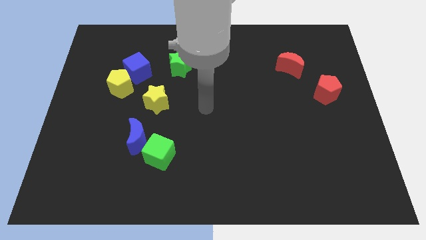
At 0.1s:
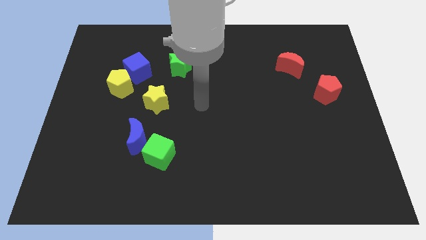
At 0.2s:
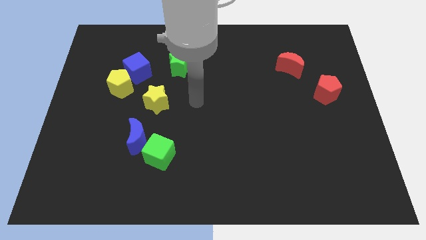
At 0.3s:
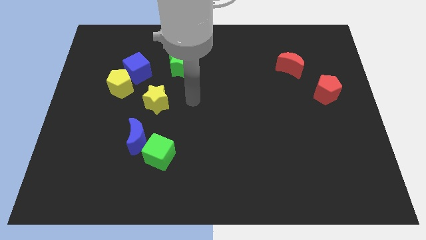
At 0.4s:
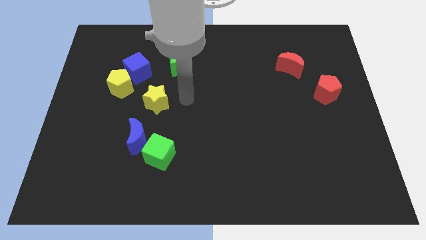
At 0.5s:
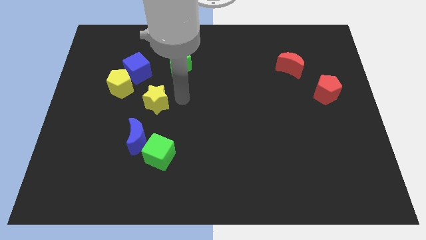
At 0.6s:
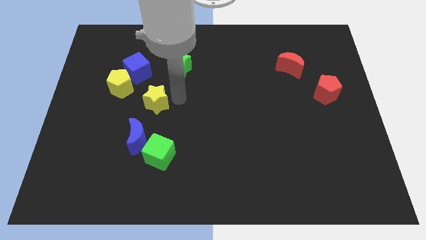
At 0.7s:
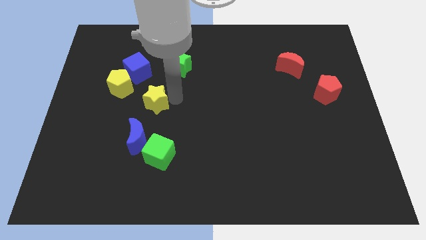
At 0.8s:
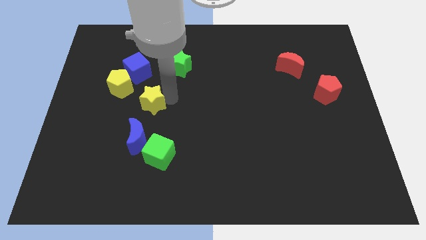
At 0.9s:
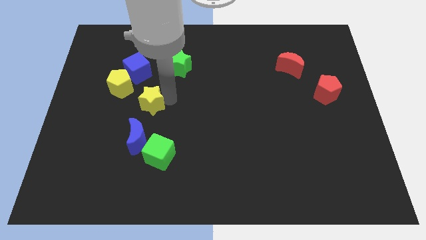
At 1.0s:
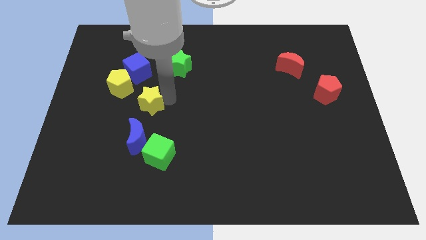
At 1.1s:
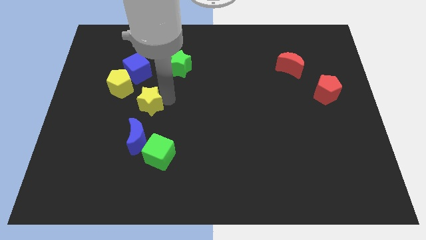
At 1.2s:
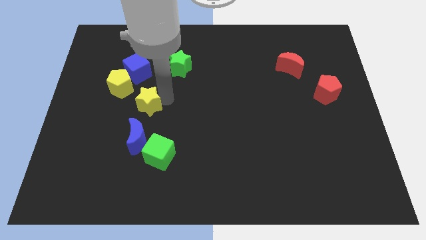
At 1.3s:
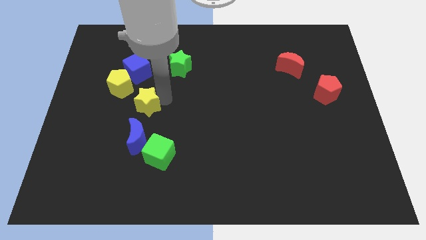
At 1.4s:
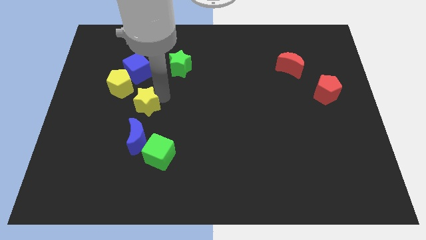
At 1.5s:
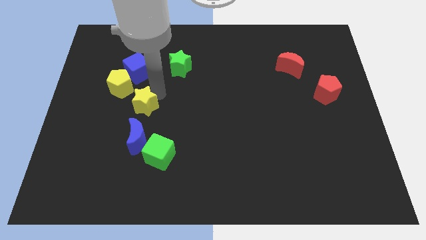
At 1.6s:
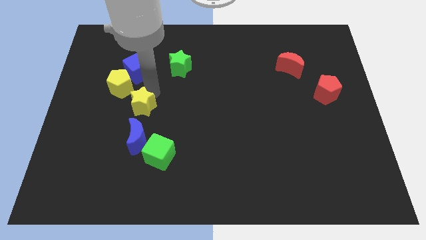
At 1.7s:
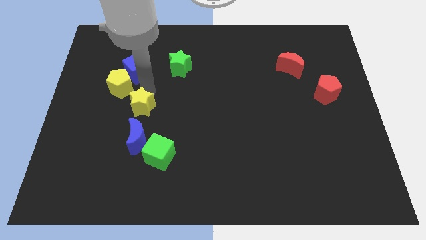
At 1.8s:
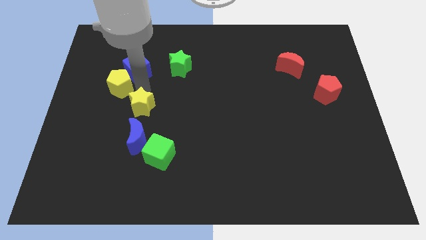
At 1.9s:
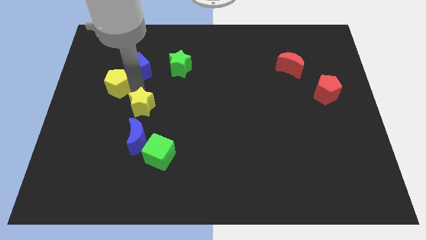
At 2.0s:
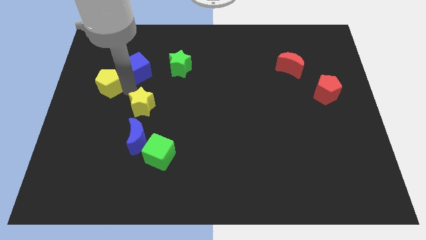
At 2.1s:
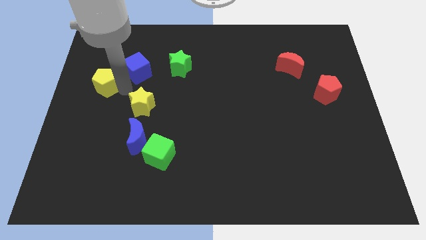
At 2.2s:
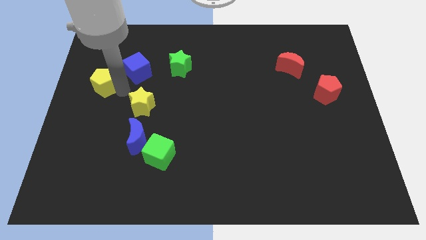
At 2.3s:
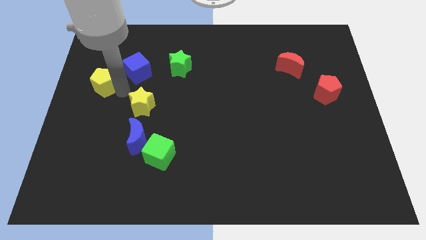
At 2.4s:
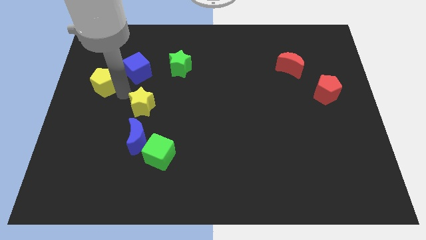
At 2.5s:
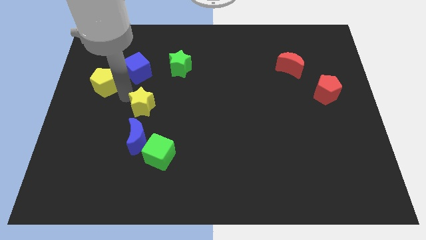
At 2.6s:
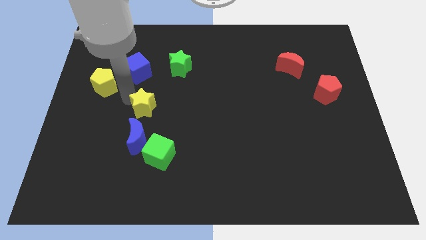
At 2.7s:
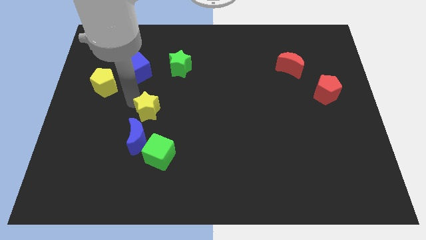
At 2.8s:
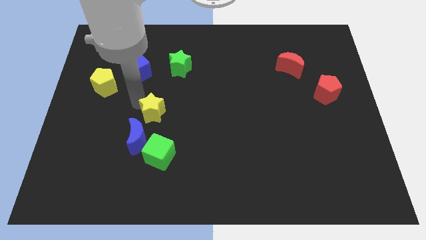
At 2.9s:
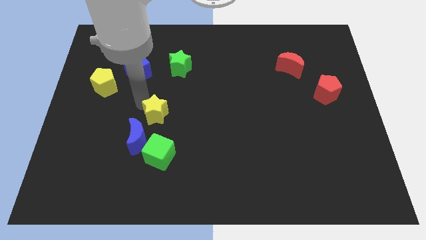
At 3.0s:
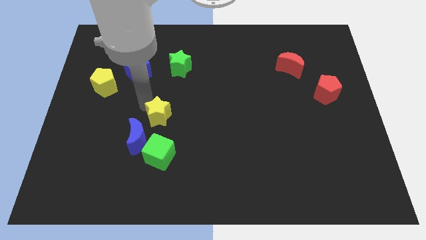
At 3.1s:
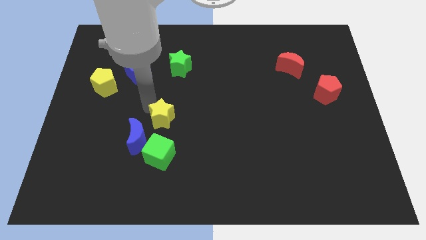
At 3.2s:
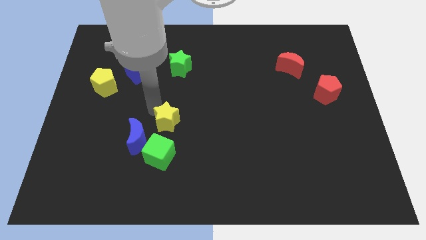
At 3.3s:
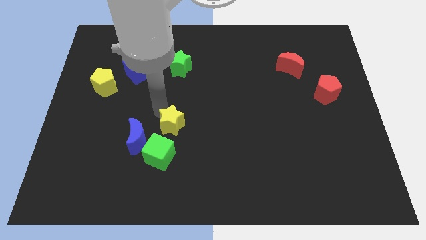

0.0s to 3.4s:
slightly move the yellow star to the bottom right of the blue cube

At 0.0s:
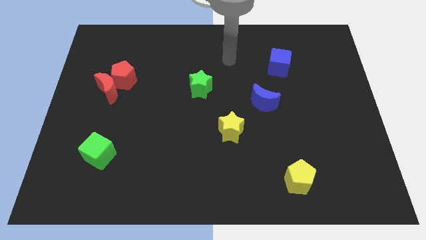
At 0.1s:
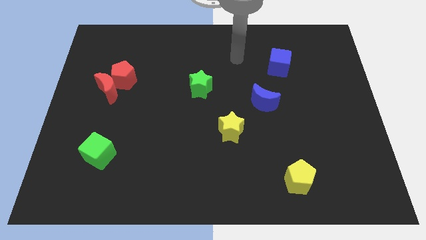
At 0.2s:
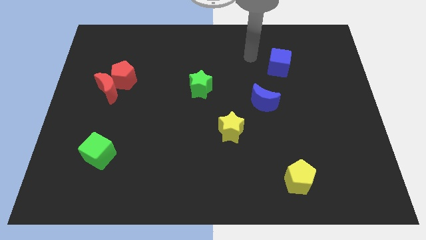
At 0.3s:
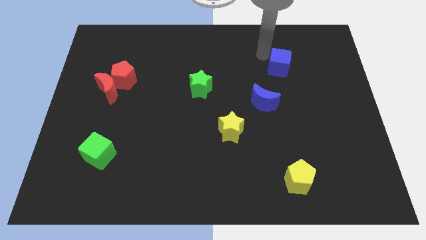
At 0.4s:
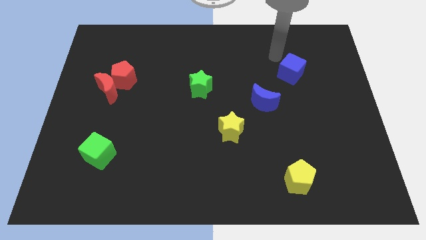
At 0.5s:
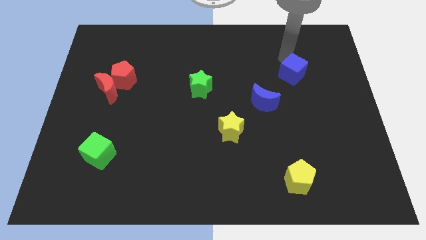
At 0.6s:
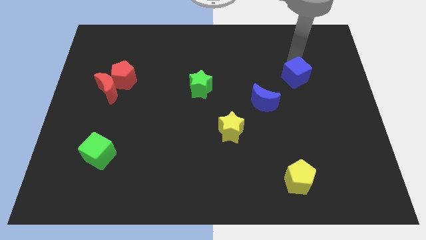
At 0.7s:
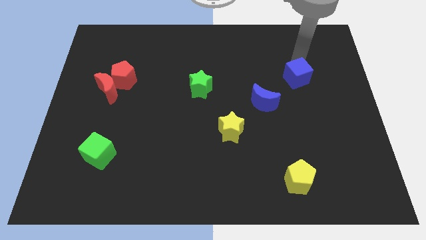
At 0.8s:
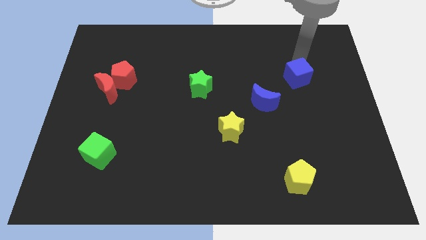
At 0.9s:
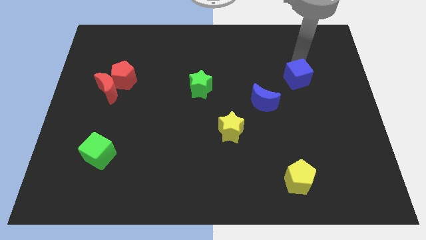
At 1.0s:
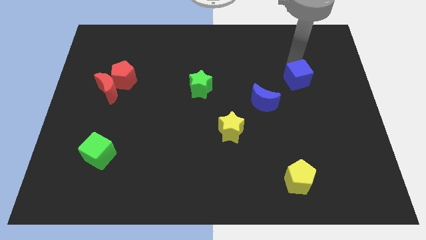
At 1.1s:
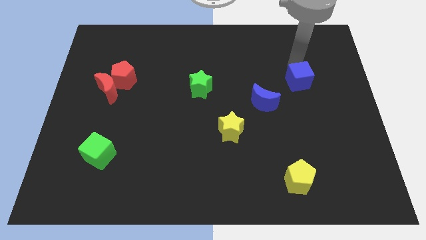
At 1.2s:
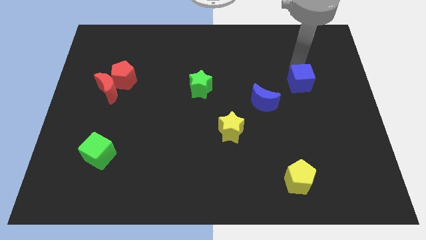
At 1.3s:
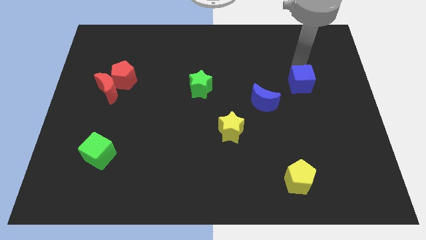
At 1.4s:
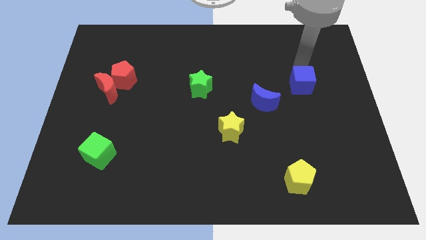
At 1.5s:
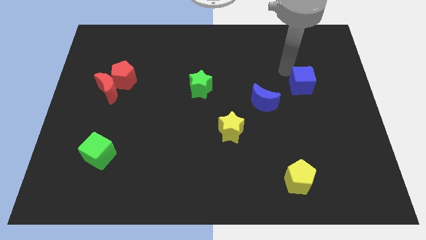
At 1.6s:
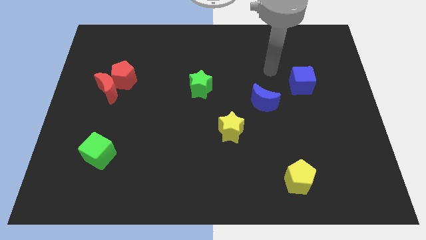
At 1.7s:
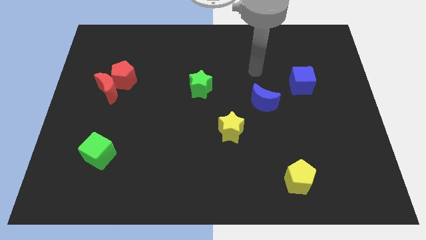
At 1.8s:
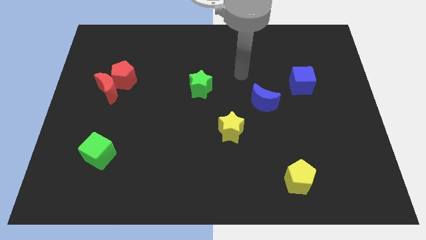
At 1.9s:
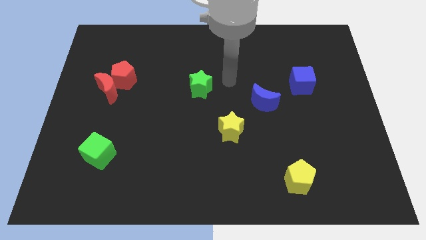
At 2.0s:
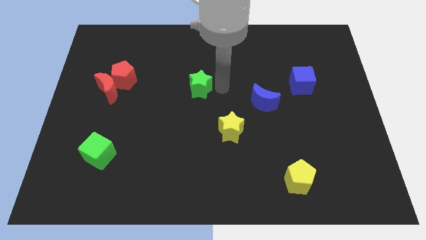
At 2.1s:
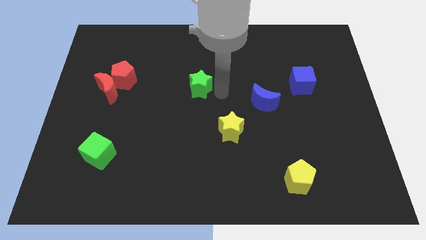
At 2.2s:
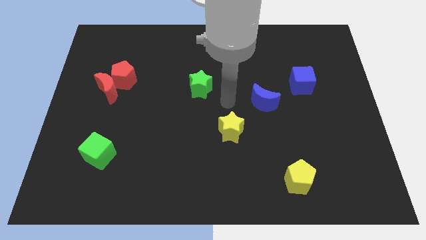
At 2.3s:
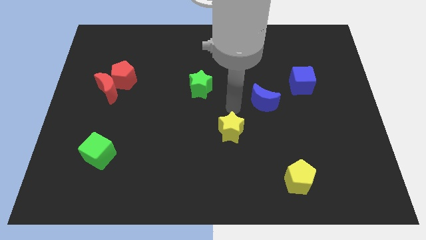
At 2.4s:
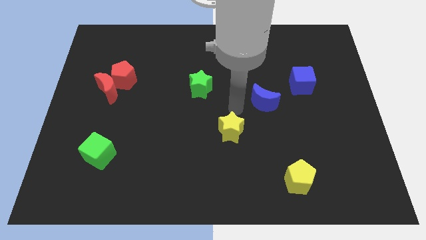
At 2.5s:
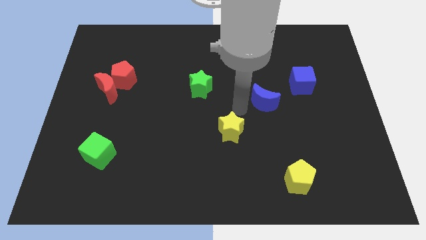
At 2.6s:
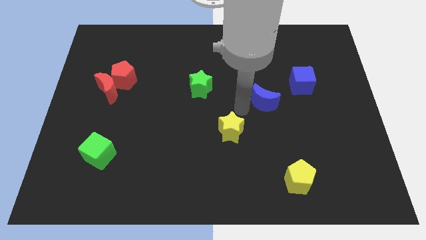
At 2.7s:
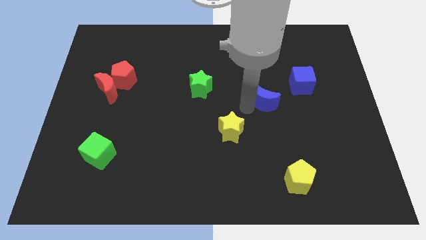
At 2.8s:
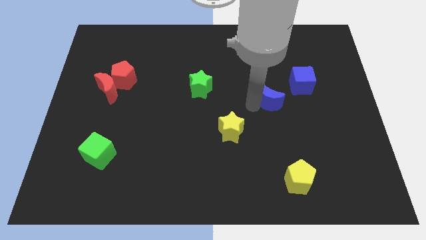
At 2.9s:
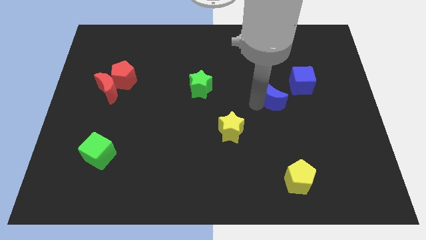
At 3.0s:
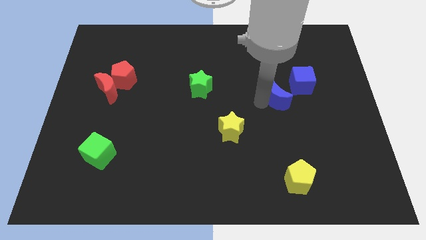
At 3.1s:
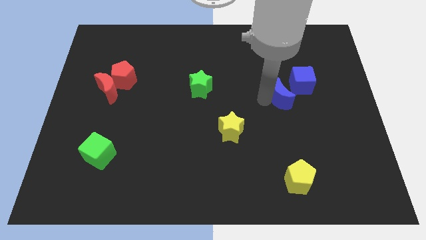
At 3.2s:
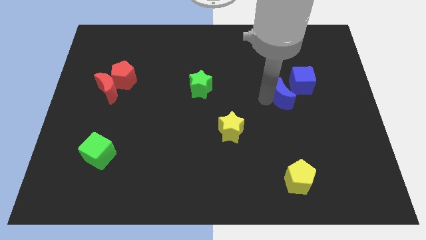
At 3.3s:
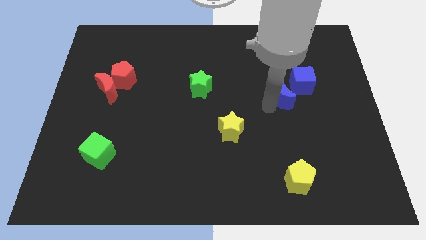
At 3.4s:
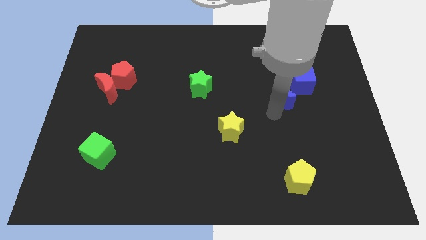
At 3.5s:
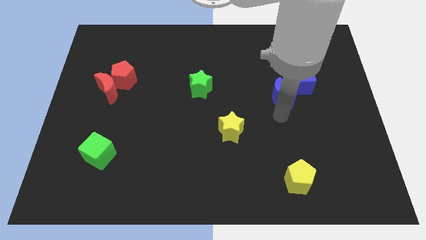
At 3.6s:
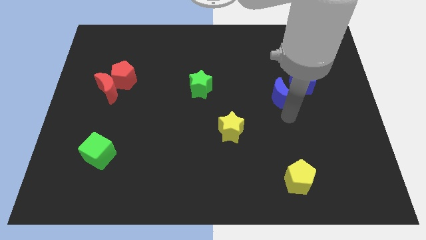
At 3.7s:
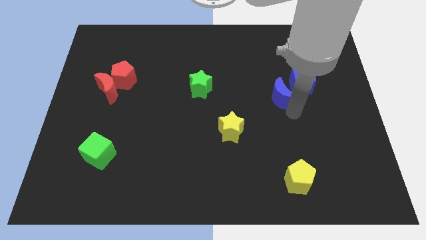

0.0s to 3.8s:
move blue moon into blue cube

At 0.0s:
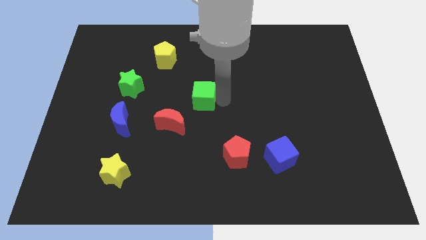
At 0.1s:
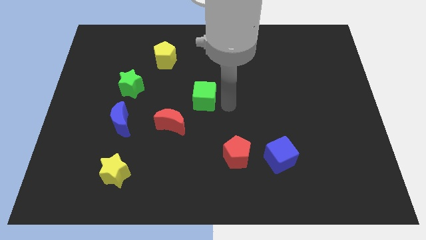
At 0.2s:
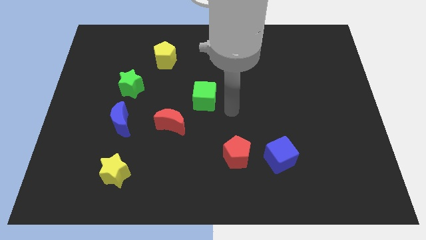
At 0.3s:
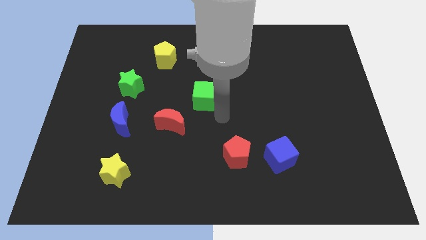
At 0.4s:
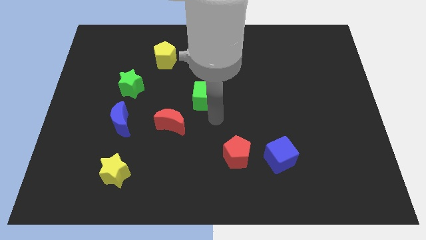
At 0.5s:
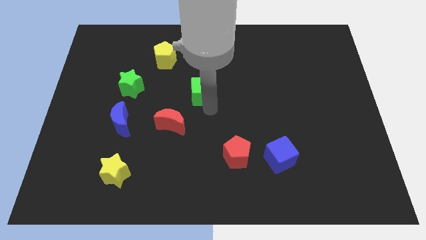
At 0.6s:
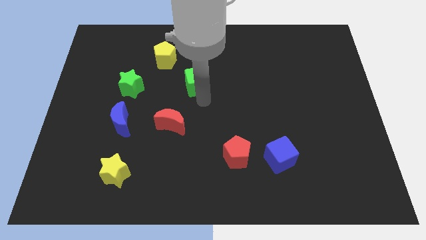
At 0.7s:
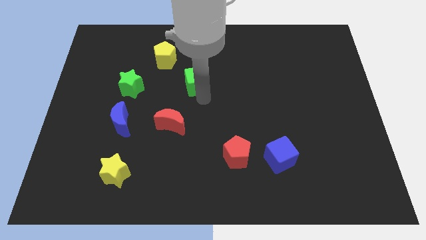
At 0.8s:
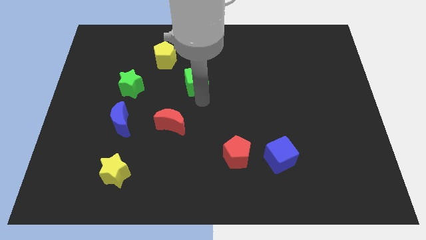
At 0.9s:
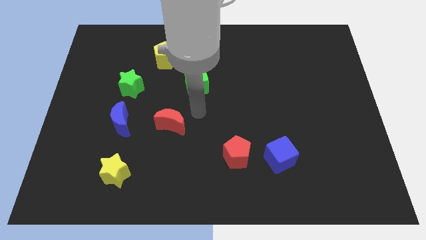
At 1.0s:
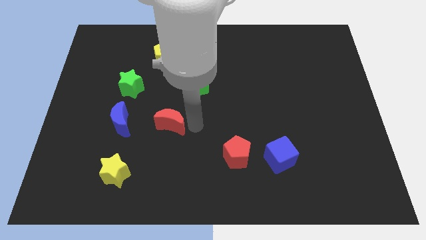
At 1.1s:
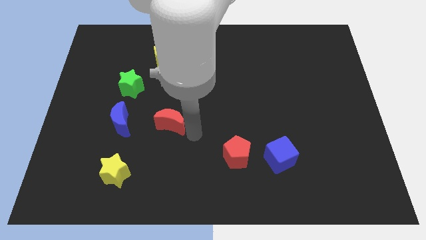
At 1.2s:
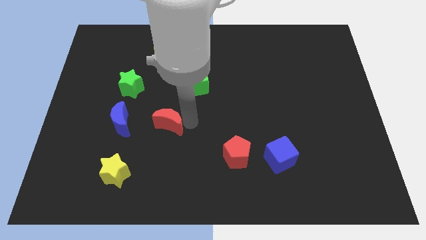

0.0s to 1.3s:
push green cube upwards

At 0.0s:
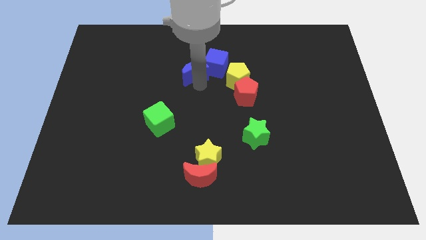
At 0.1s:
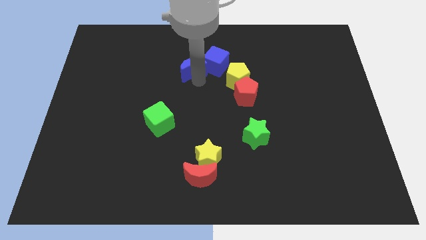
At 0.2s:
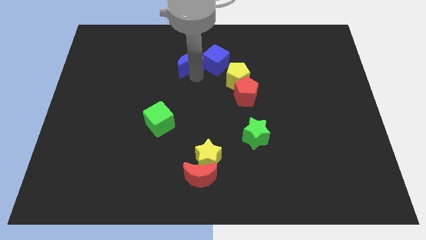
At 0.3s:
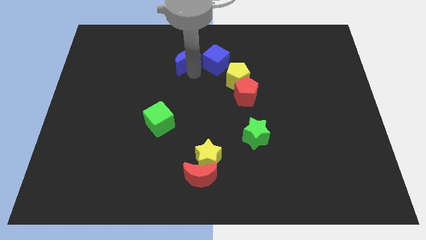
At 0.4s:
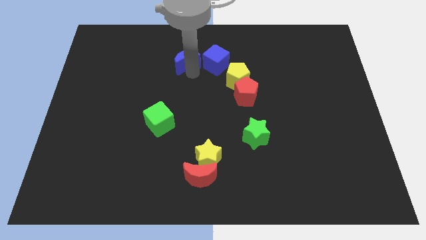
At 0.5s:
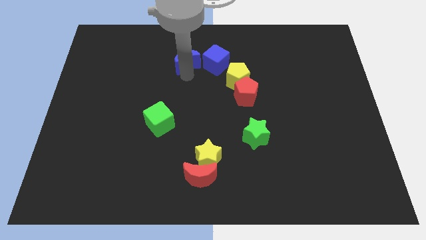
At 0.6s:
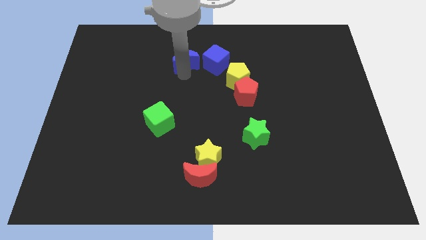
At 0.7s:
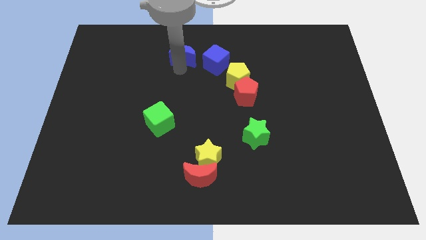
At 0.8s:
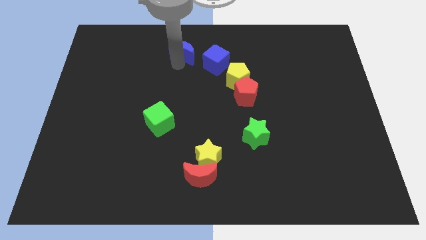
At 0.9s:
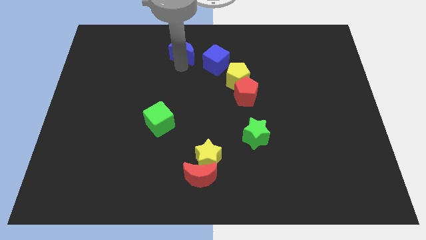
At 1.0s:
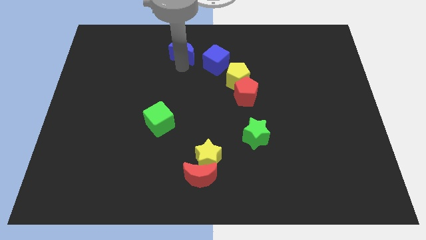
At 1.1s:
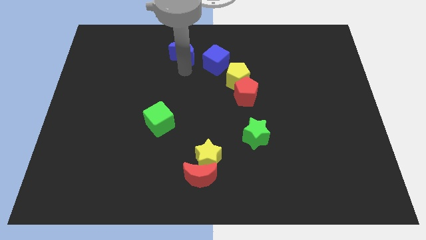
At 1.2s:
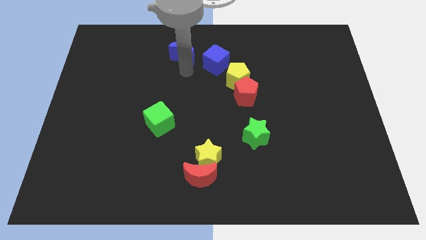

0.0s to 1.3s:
separate blue moon from the blue cube
